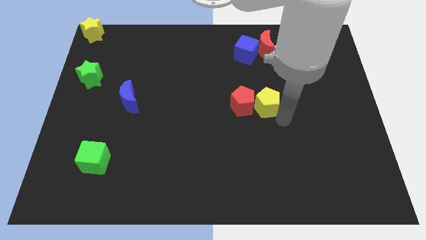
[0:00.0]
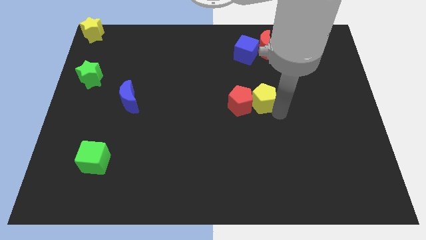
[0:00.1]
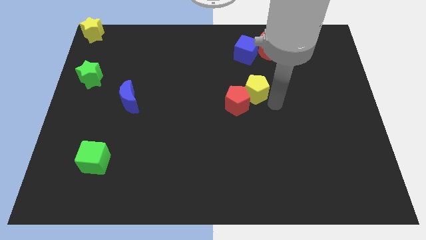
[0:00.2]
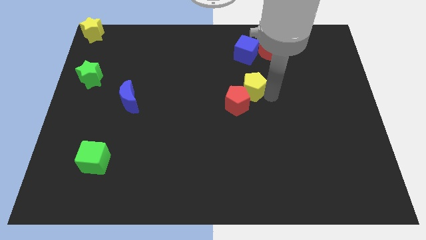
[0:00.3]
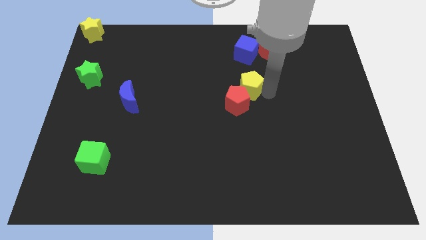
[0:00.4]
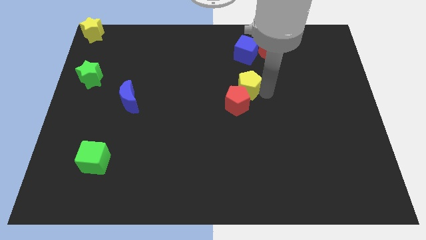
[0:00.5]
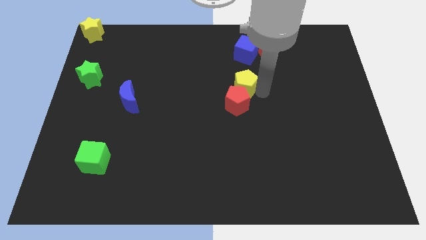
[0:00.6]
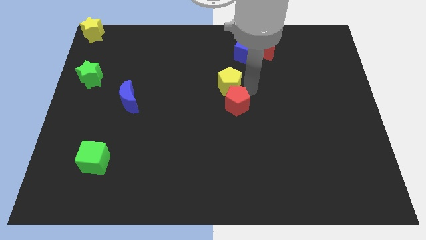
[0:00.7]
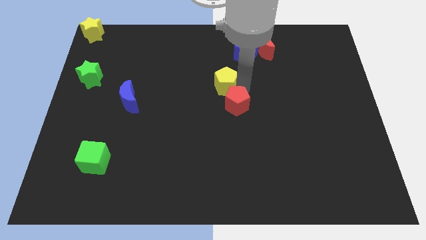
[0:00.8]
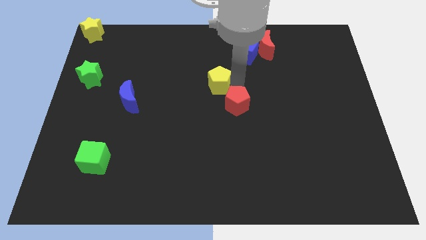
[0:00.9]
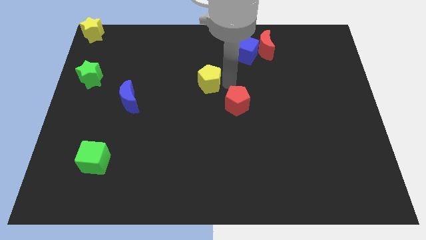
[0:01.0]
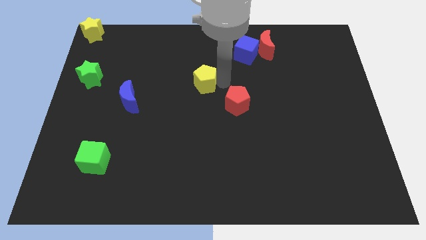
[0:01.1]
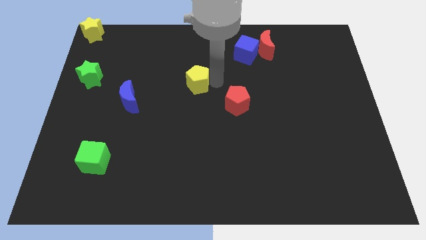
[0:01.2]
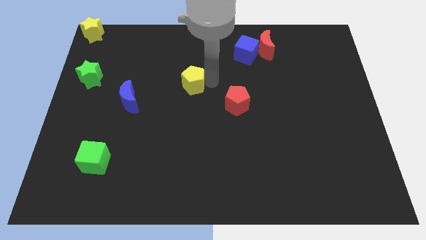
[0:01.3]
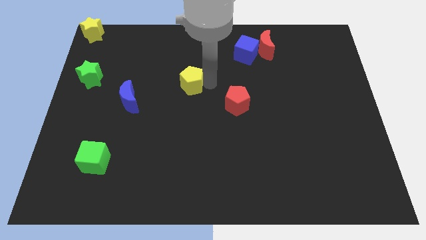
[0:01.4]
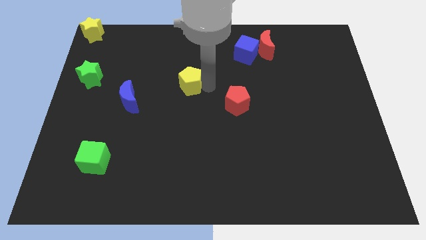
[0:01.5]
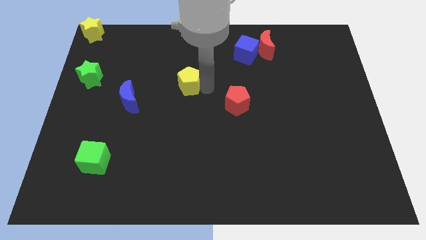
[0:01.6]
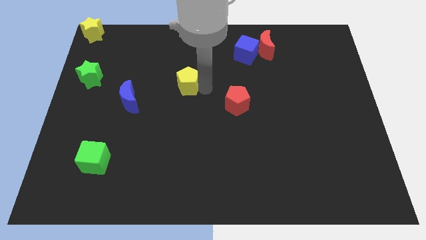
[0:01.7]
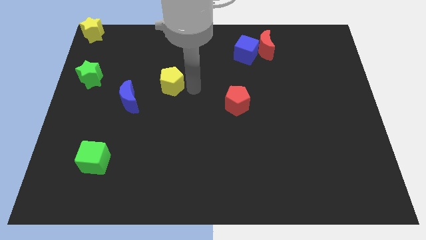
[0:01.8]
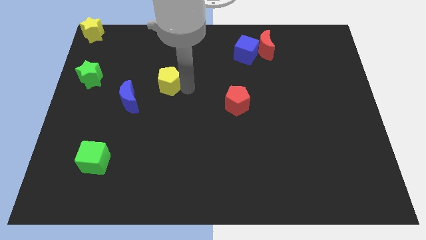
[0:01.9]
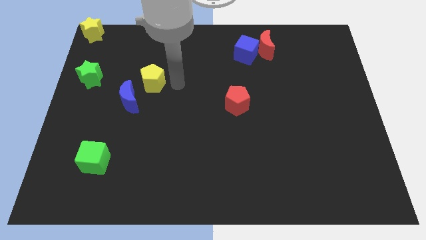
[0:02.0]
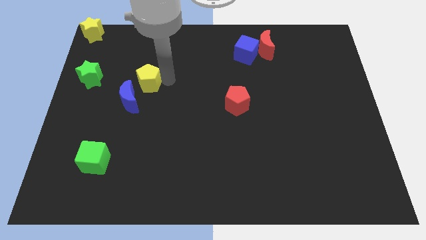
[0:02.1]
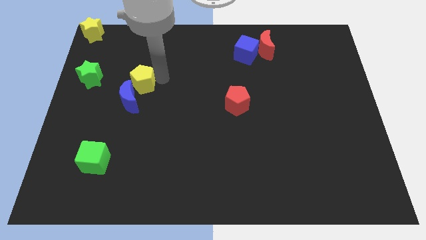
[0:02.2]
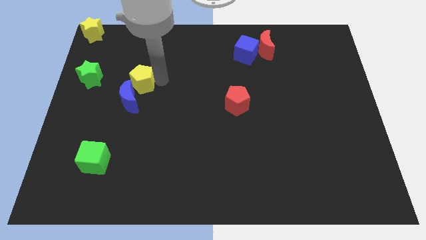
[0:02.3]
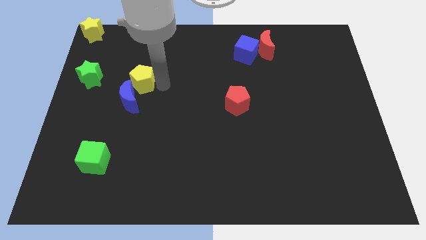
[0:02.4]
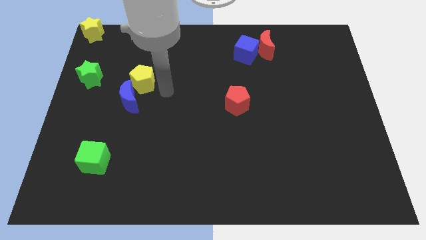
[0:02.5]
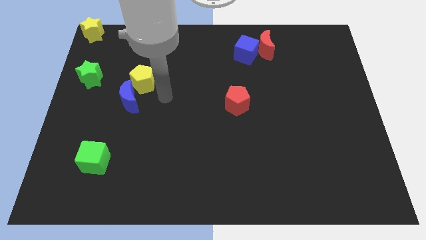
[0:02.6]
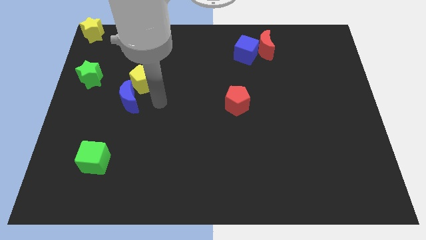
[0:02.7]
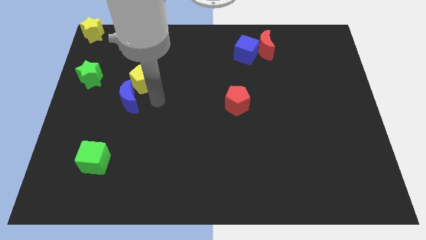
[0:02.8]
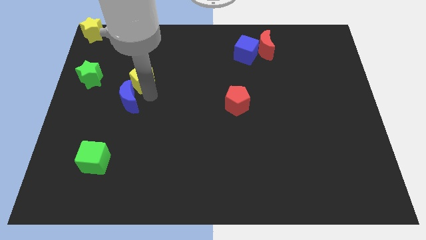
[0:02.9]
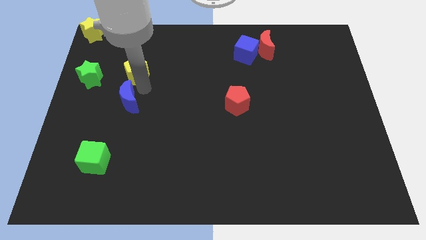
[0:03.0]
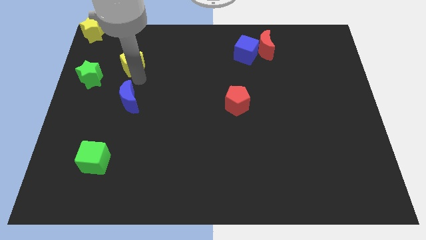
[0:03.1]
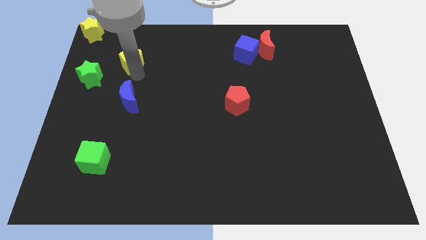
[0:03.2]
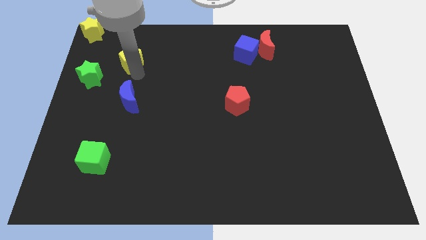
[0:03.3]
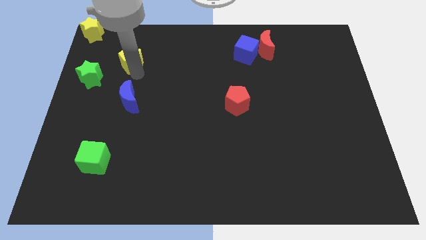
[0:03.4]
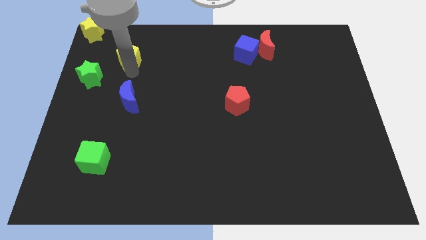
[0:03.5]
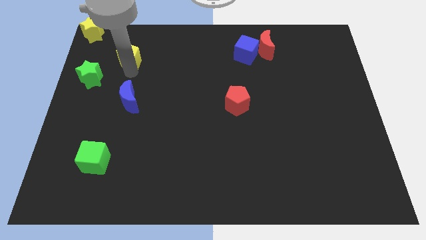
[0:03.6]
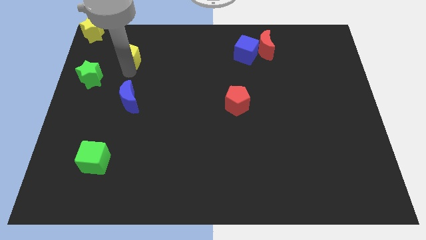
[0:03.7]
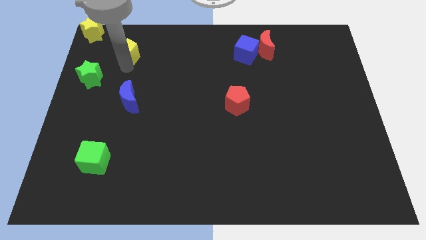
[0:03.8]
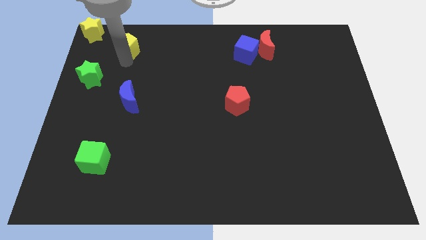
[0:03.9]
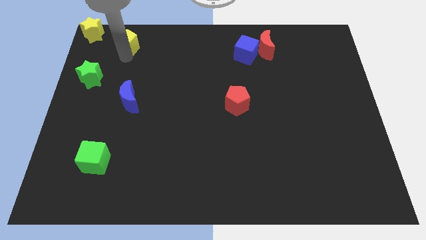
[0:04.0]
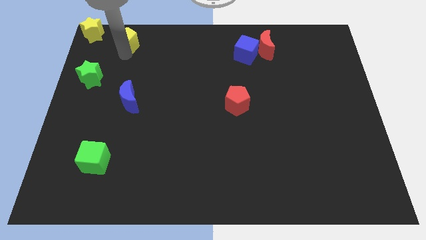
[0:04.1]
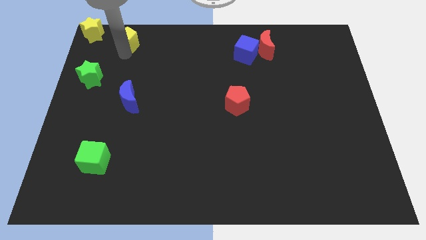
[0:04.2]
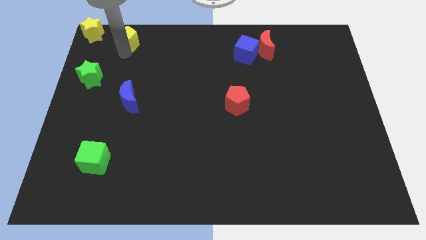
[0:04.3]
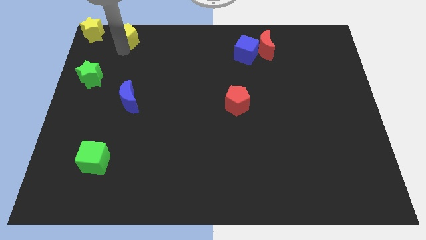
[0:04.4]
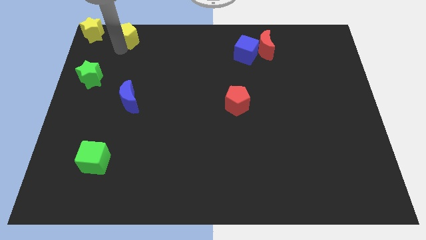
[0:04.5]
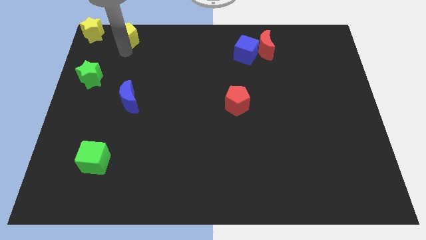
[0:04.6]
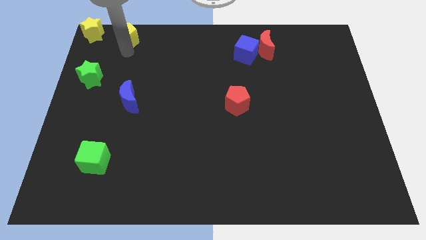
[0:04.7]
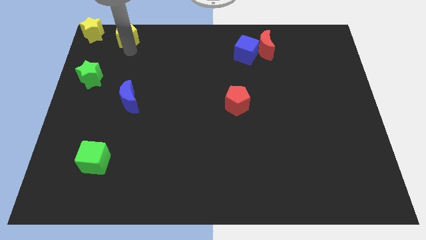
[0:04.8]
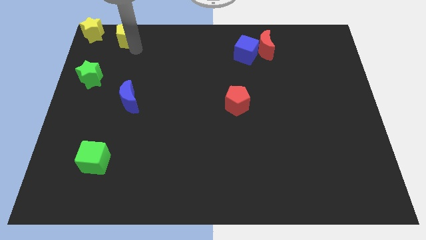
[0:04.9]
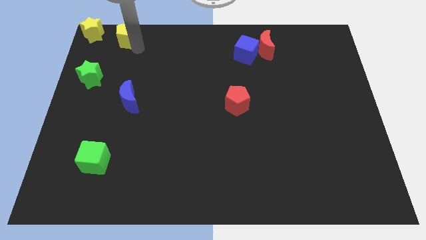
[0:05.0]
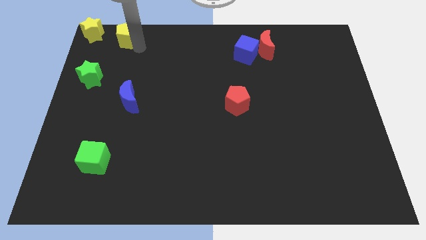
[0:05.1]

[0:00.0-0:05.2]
move the yellow pentagon towards the yellow star

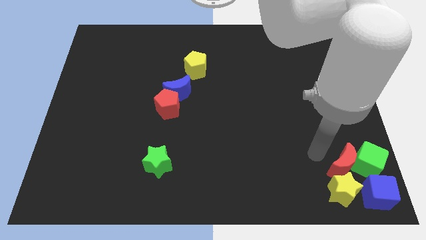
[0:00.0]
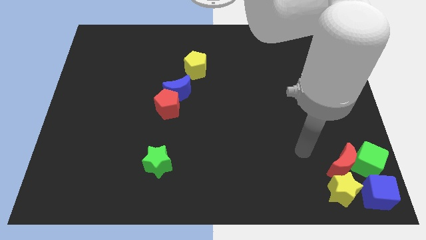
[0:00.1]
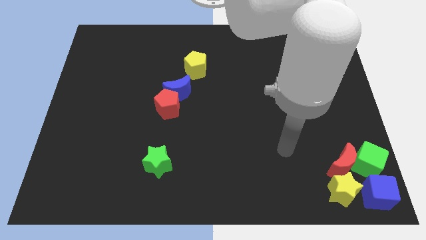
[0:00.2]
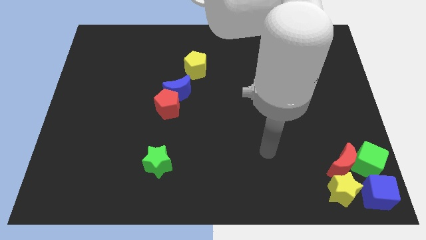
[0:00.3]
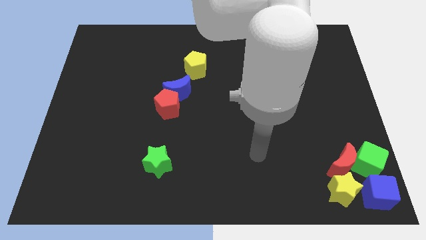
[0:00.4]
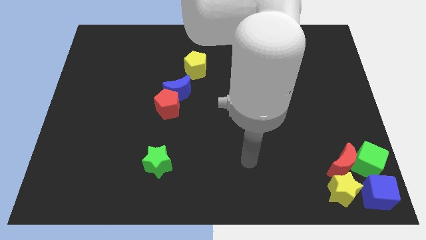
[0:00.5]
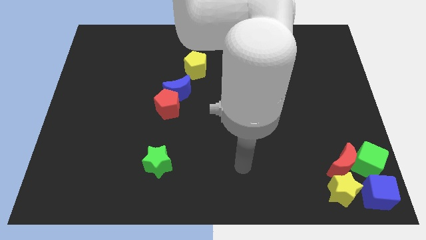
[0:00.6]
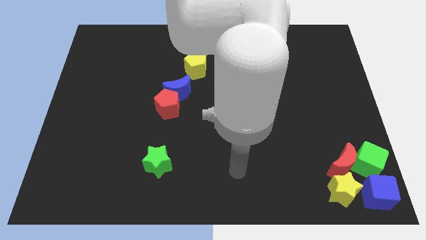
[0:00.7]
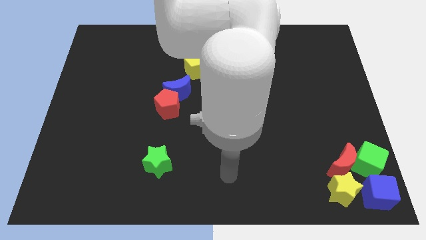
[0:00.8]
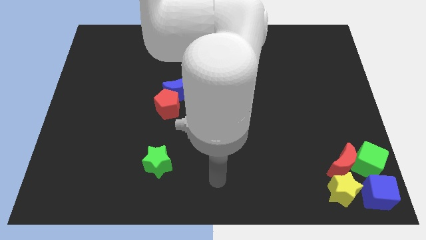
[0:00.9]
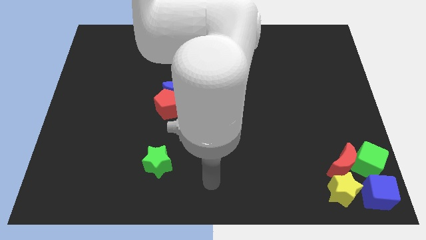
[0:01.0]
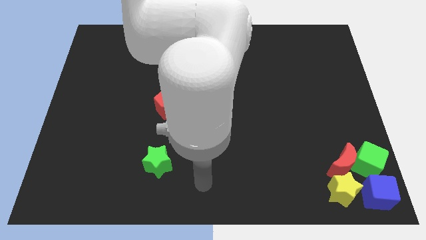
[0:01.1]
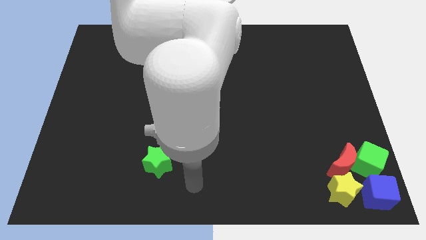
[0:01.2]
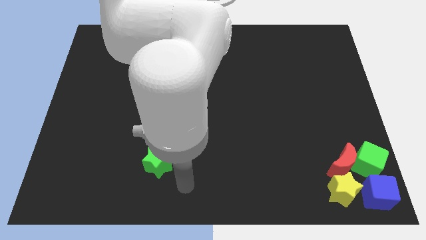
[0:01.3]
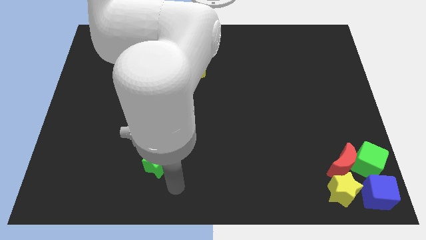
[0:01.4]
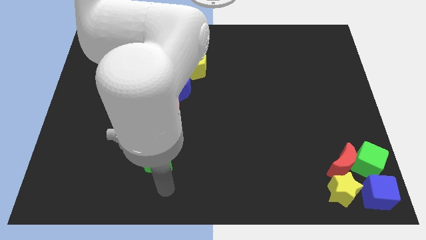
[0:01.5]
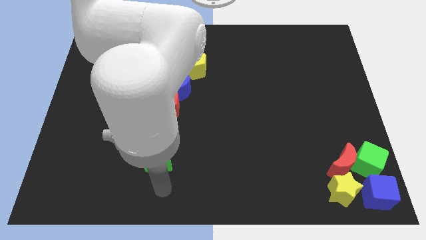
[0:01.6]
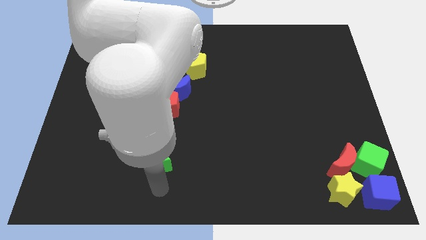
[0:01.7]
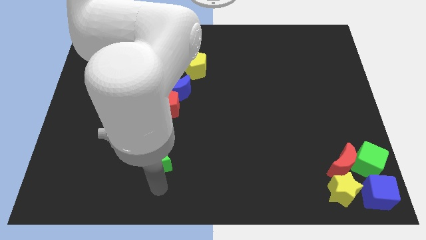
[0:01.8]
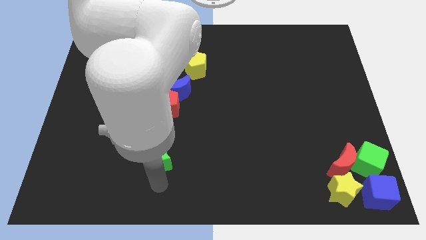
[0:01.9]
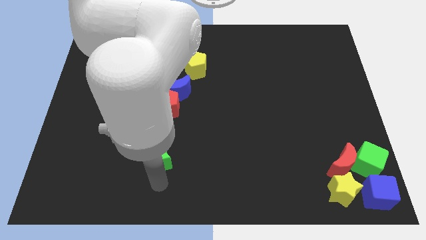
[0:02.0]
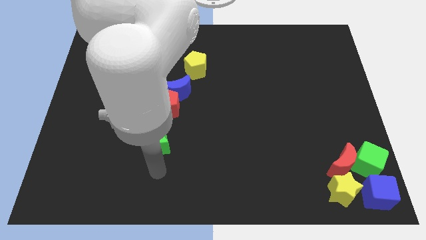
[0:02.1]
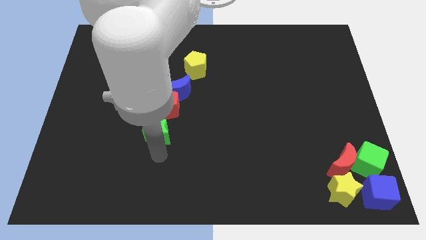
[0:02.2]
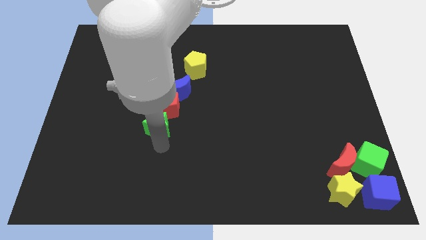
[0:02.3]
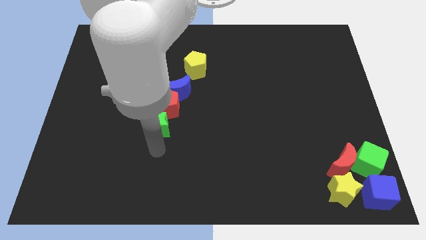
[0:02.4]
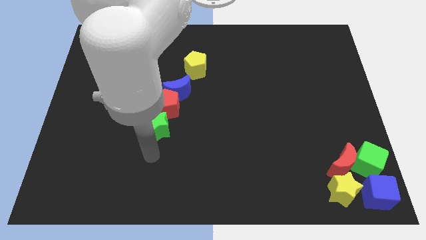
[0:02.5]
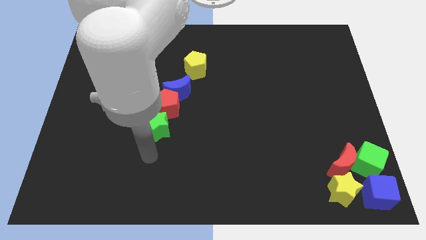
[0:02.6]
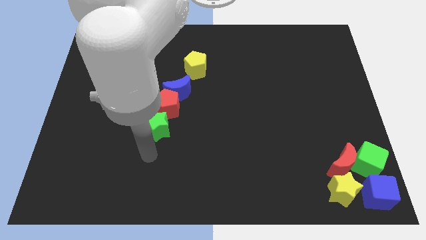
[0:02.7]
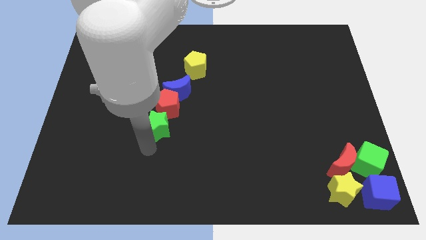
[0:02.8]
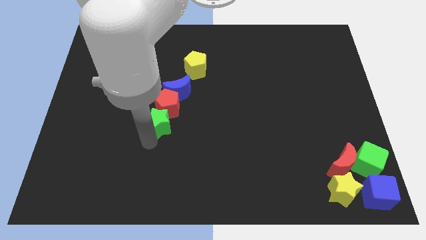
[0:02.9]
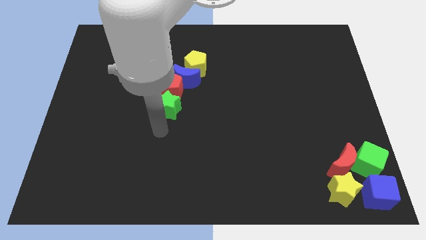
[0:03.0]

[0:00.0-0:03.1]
push the green star into the red pentagon

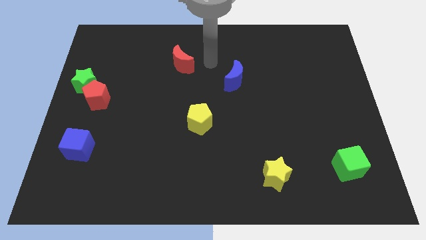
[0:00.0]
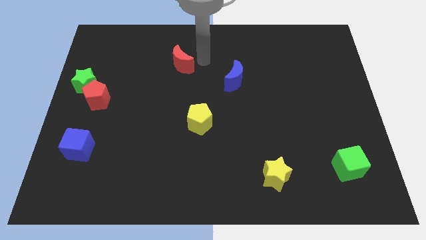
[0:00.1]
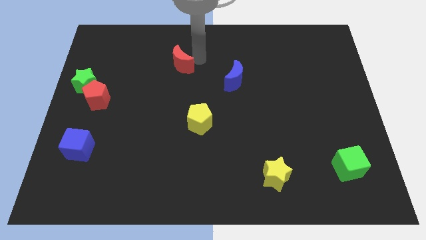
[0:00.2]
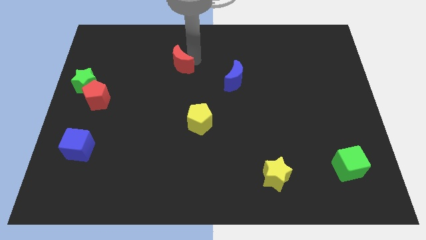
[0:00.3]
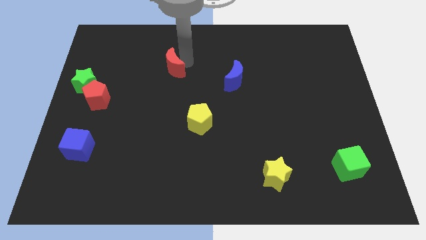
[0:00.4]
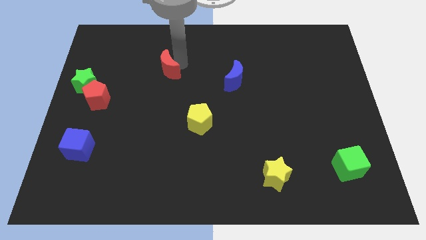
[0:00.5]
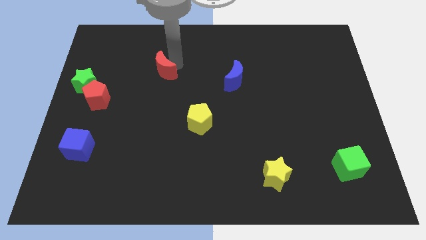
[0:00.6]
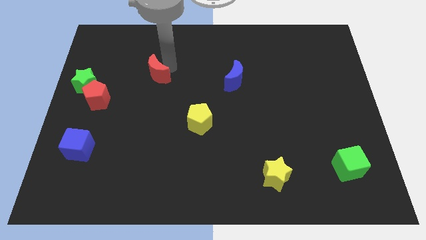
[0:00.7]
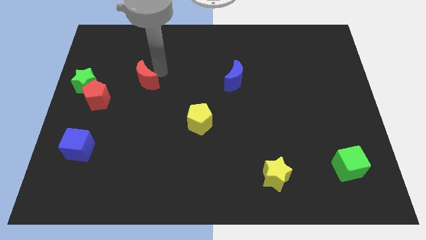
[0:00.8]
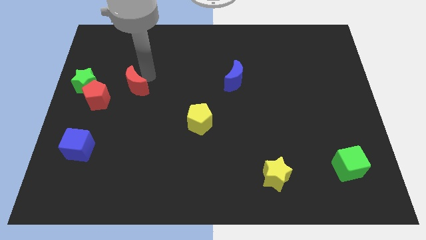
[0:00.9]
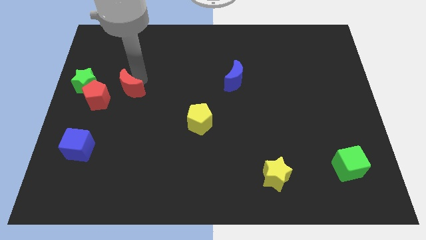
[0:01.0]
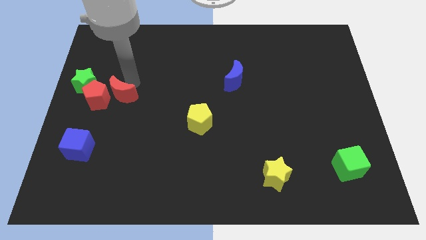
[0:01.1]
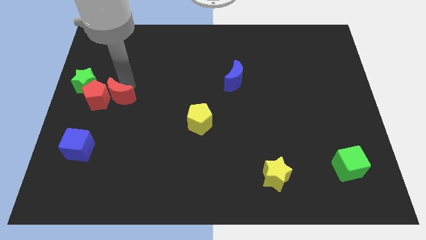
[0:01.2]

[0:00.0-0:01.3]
push the red moon into the red pentagon diagonally
